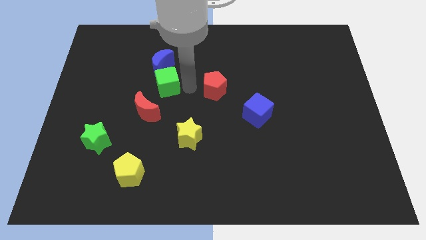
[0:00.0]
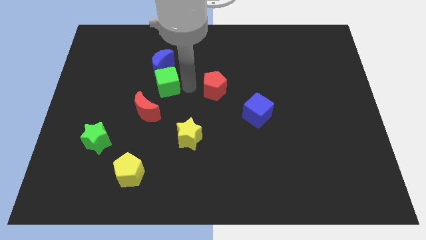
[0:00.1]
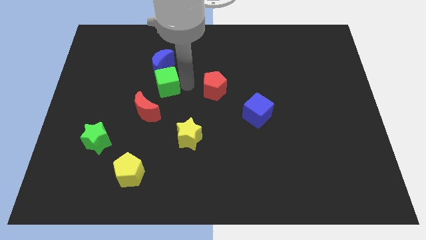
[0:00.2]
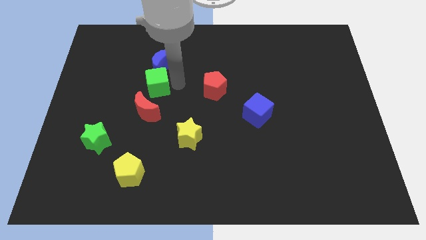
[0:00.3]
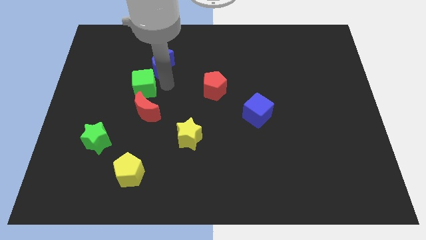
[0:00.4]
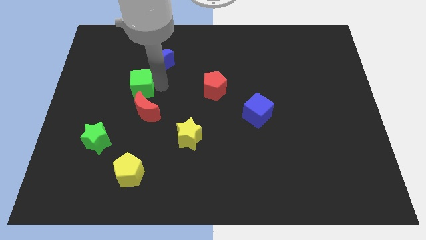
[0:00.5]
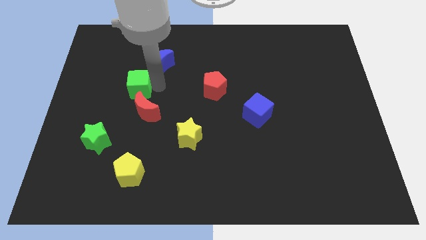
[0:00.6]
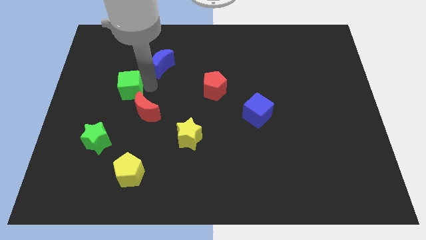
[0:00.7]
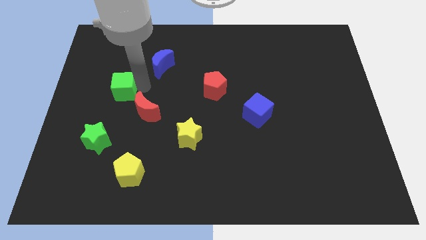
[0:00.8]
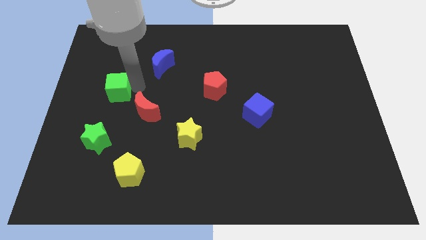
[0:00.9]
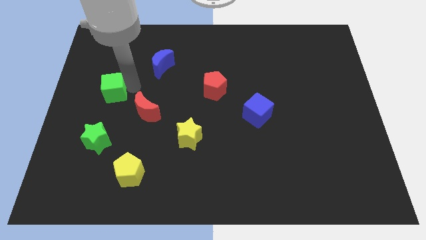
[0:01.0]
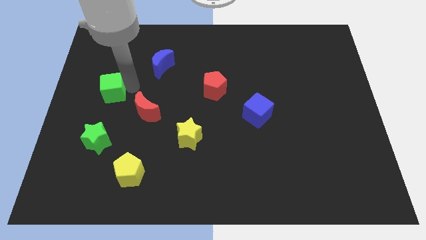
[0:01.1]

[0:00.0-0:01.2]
move the green cube to the top left side of the red moon

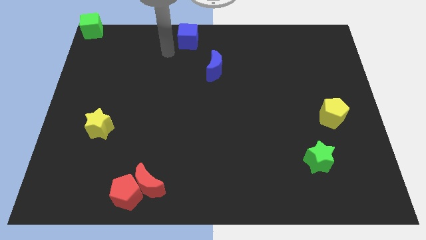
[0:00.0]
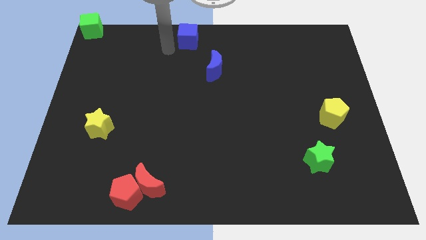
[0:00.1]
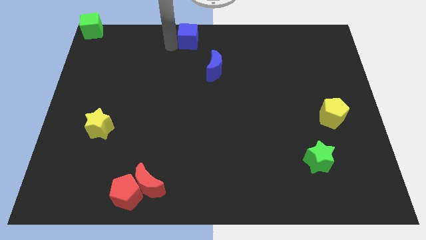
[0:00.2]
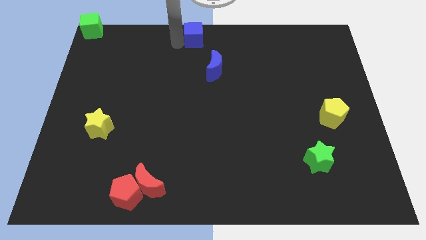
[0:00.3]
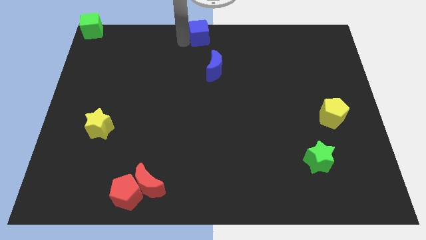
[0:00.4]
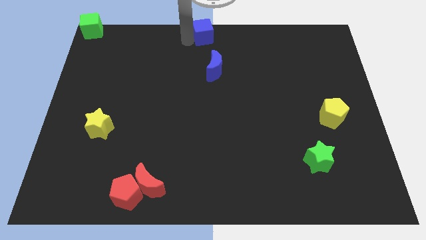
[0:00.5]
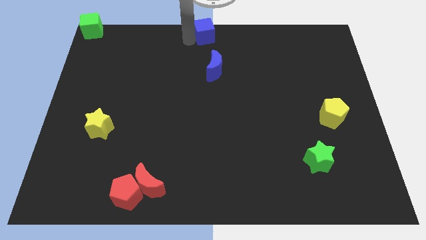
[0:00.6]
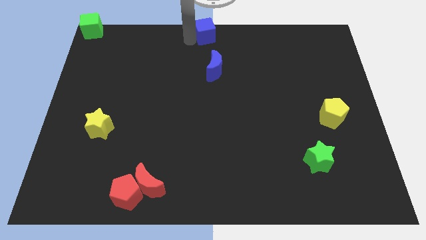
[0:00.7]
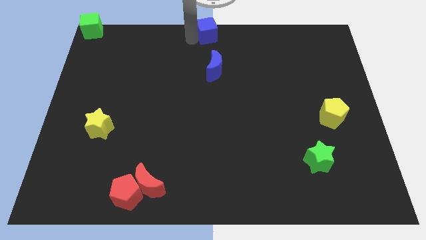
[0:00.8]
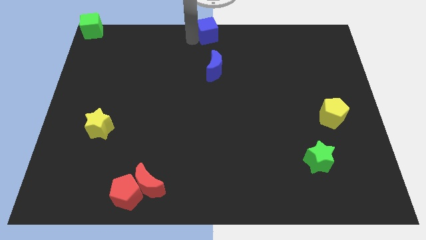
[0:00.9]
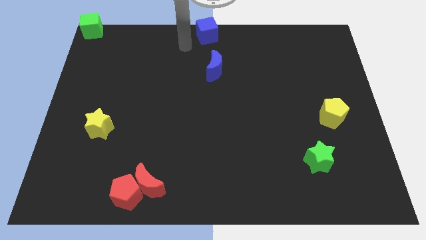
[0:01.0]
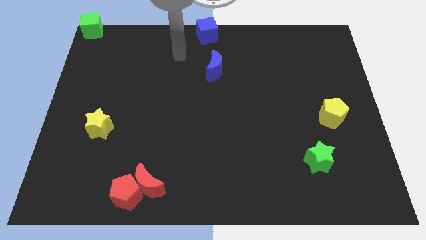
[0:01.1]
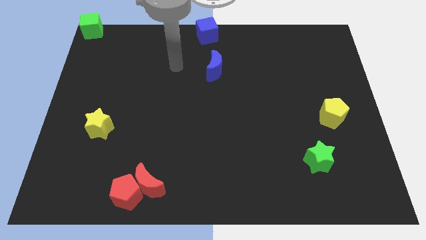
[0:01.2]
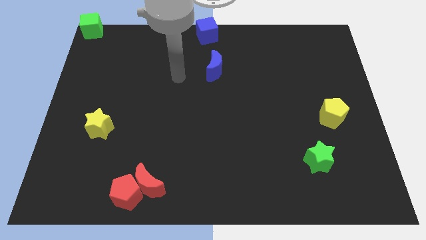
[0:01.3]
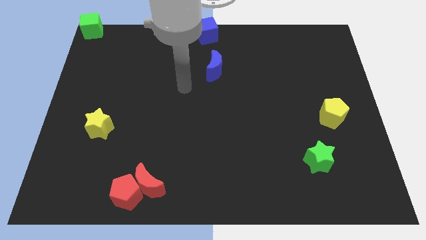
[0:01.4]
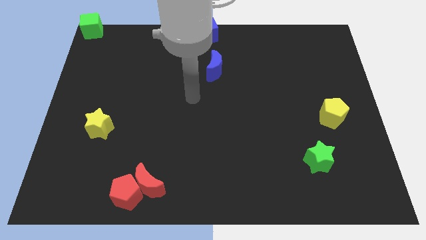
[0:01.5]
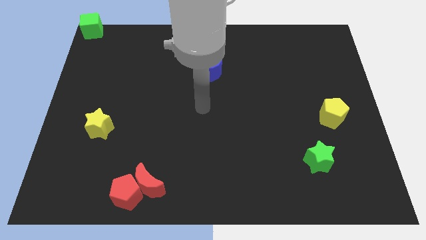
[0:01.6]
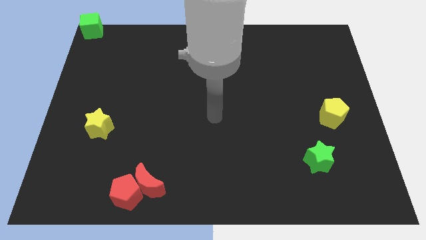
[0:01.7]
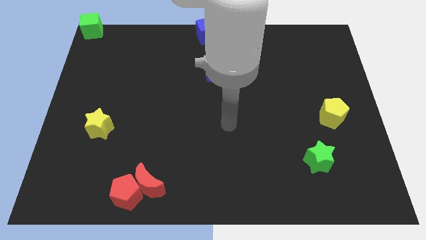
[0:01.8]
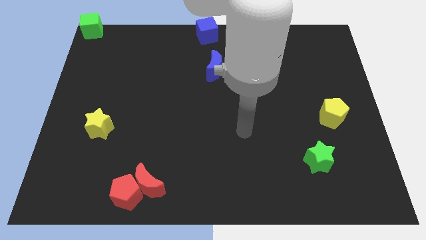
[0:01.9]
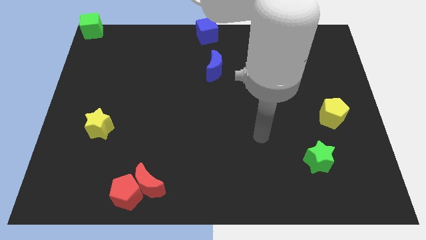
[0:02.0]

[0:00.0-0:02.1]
move the blue cube to the top center

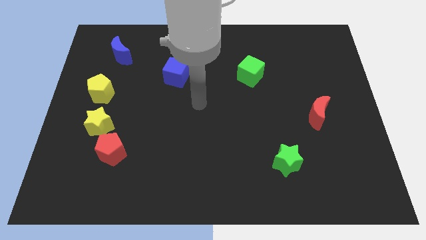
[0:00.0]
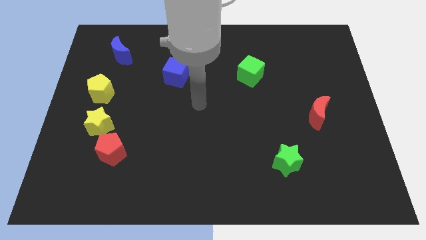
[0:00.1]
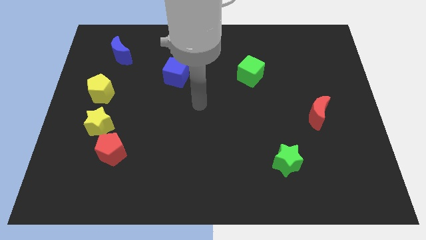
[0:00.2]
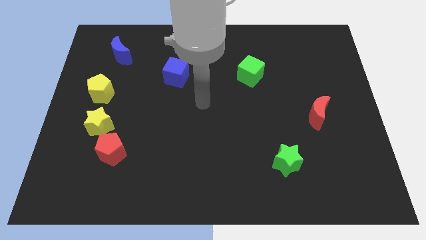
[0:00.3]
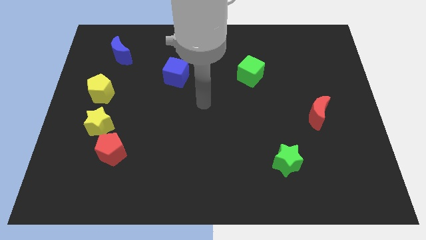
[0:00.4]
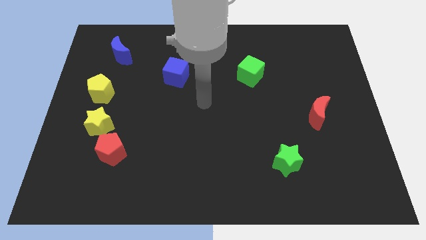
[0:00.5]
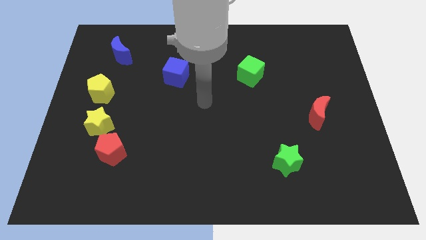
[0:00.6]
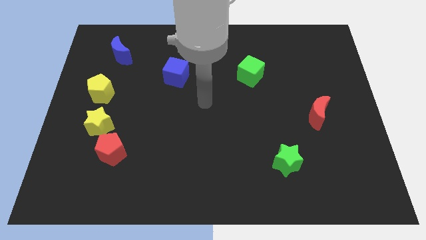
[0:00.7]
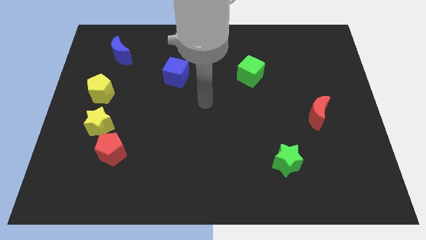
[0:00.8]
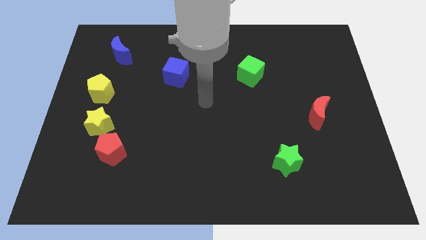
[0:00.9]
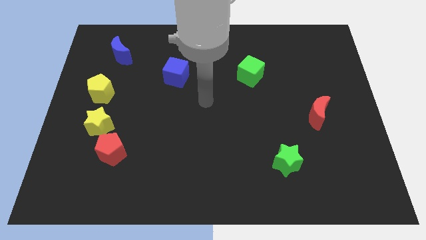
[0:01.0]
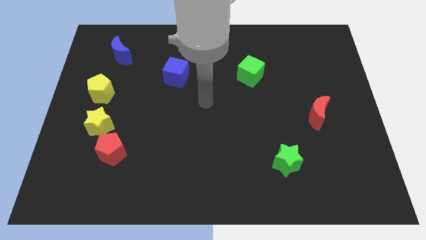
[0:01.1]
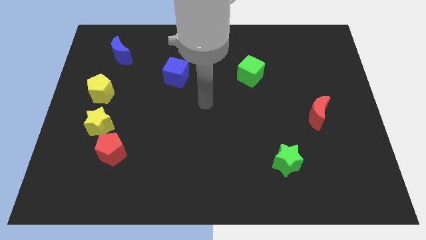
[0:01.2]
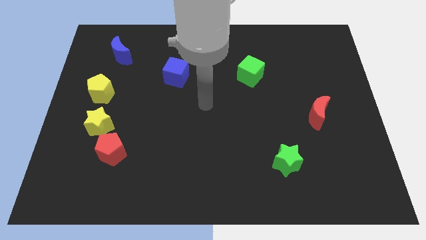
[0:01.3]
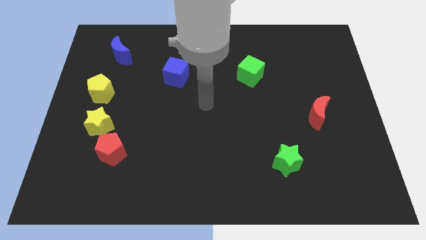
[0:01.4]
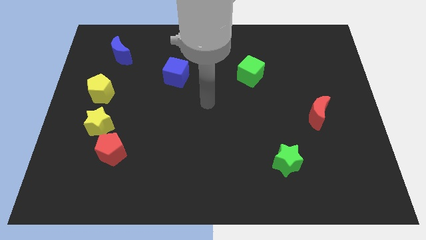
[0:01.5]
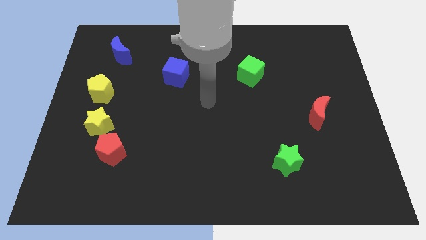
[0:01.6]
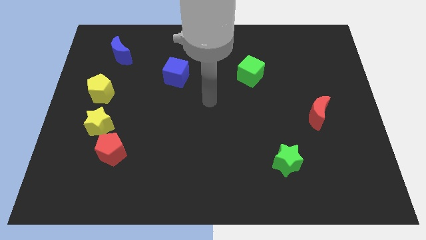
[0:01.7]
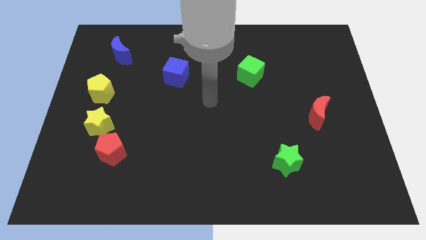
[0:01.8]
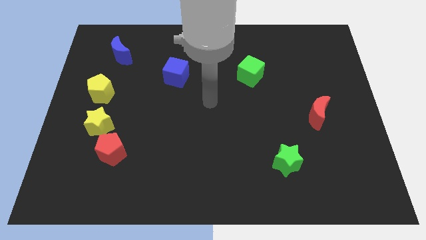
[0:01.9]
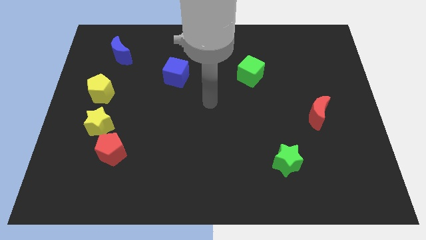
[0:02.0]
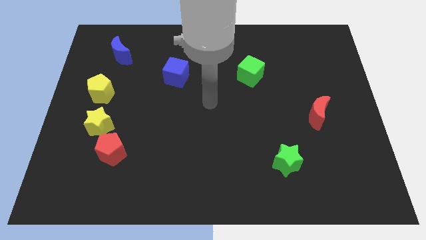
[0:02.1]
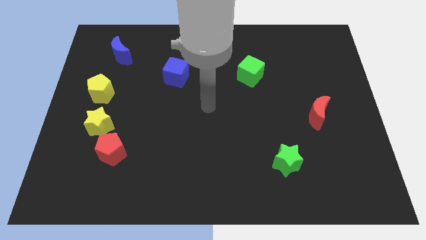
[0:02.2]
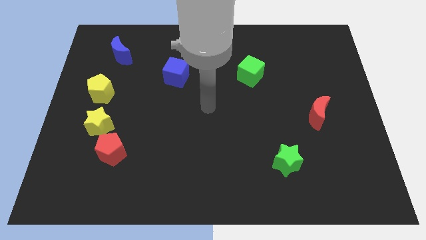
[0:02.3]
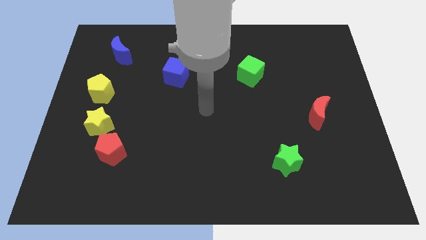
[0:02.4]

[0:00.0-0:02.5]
go to the center of the table

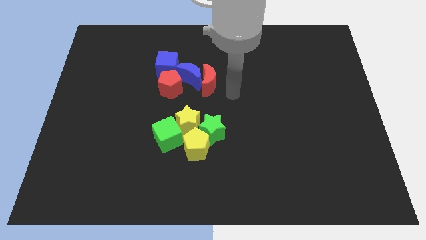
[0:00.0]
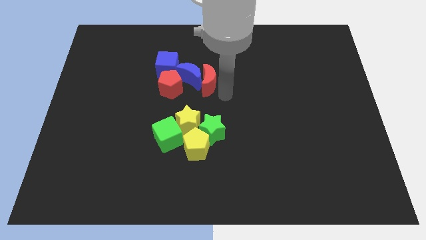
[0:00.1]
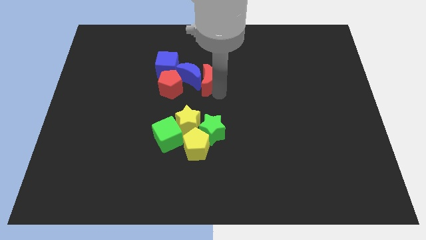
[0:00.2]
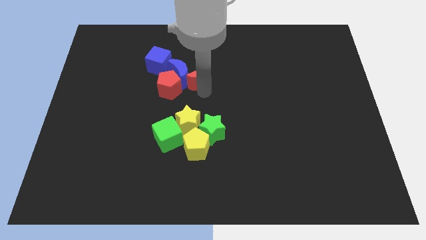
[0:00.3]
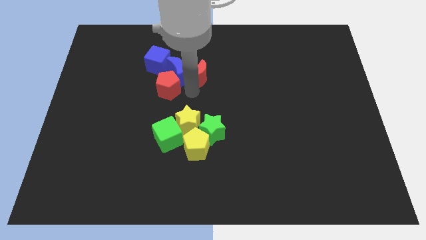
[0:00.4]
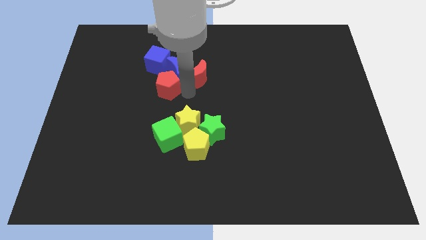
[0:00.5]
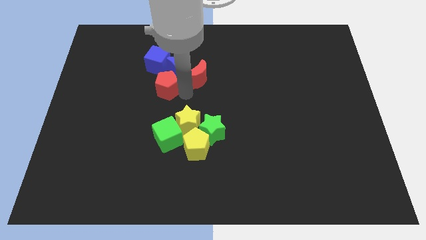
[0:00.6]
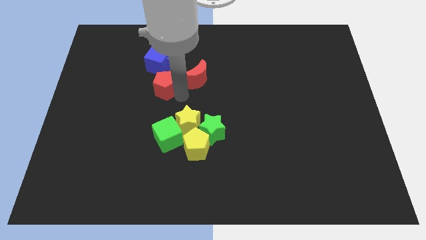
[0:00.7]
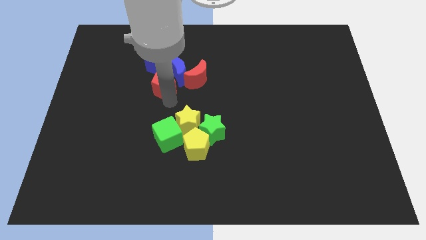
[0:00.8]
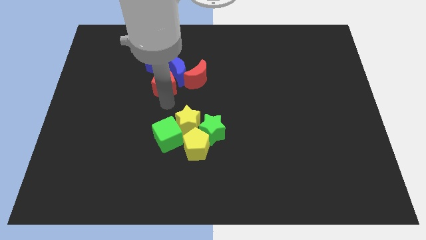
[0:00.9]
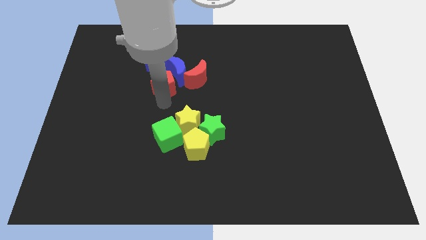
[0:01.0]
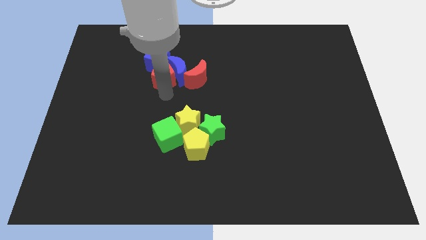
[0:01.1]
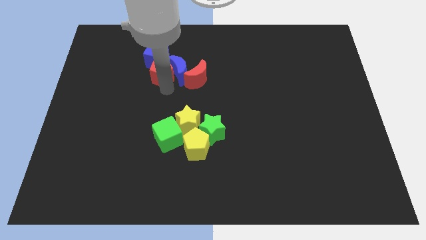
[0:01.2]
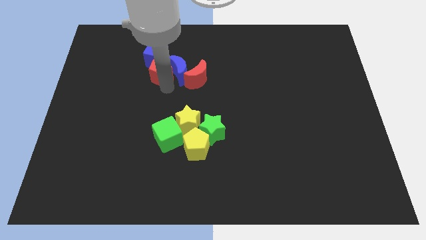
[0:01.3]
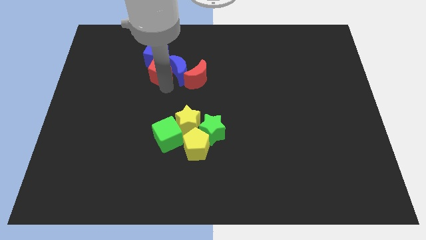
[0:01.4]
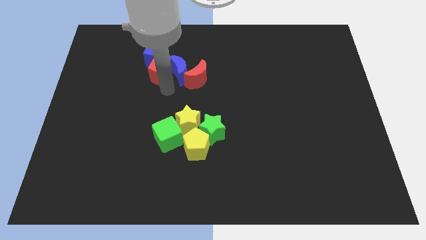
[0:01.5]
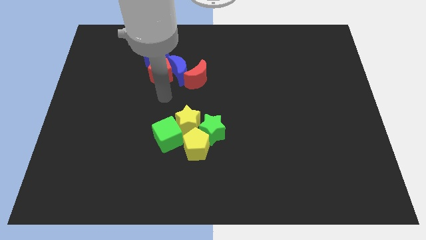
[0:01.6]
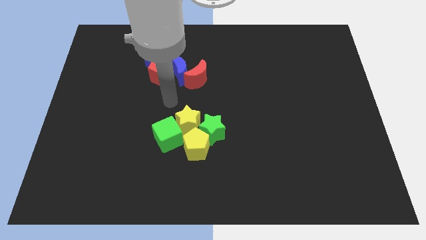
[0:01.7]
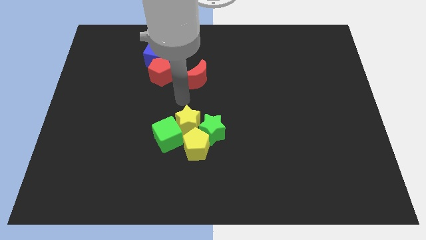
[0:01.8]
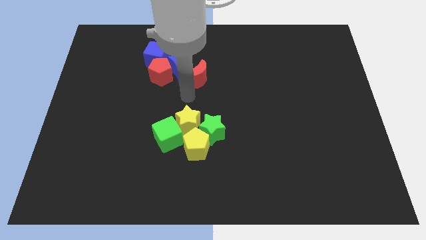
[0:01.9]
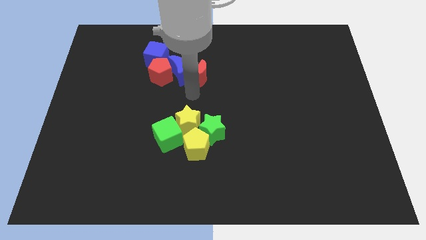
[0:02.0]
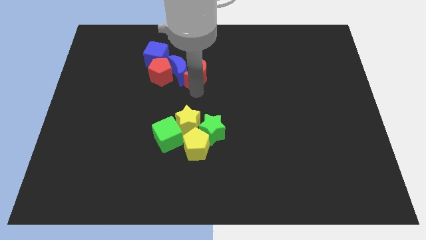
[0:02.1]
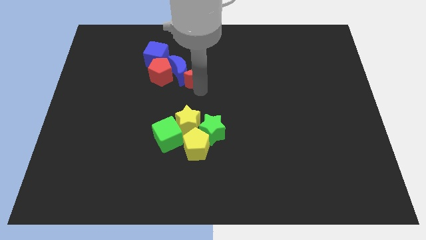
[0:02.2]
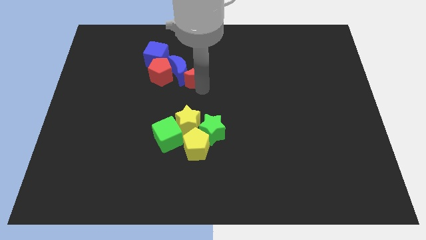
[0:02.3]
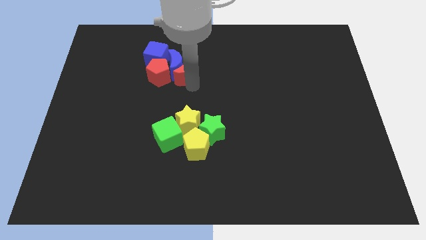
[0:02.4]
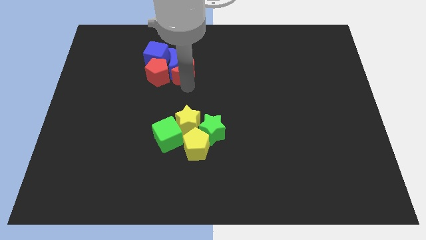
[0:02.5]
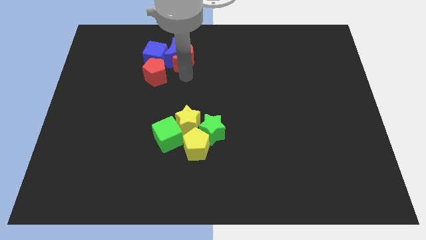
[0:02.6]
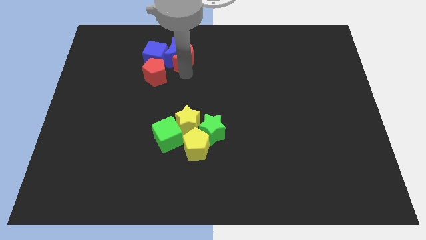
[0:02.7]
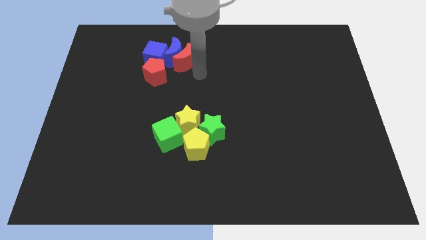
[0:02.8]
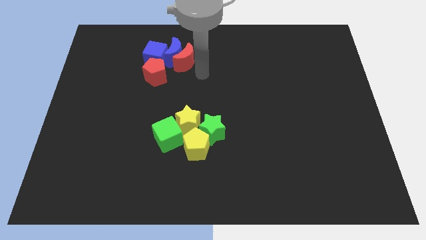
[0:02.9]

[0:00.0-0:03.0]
slightly push the red and blue blocks towards the top side of the board

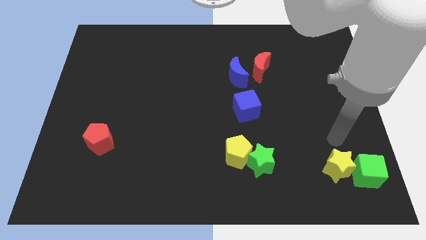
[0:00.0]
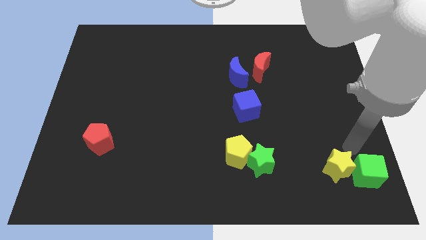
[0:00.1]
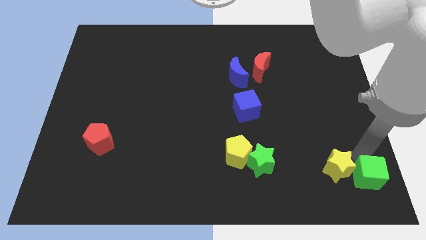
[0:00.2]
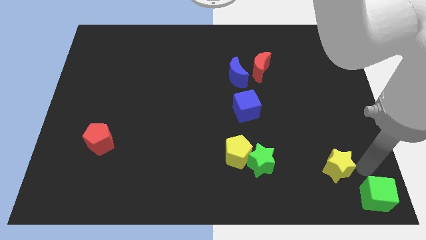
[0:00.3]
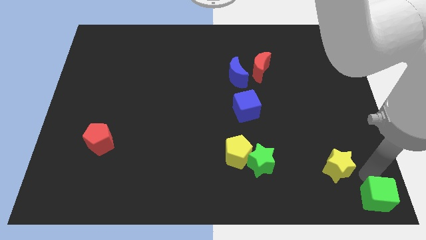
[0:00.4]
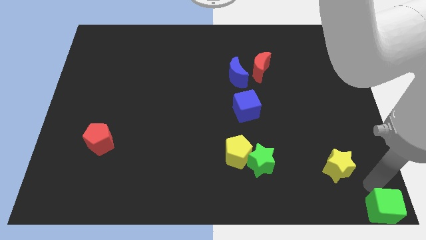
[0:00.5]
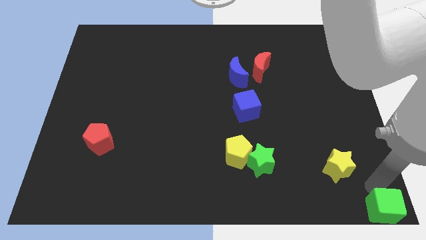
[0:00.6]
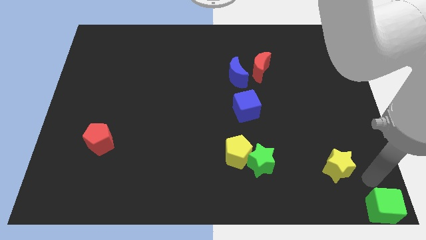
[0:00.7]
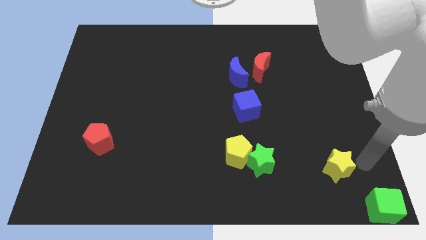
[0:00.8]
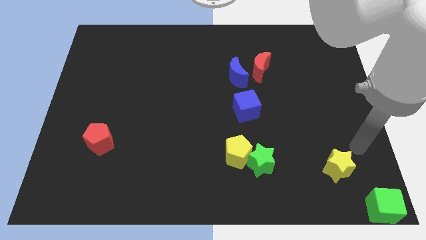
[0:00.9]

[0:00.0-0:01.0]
push the green cube towards the bottom right side of the board
